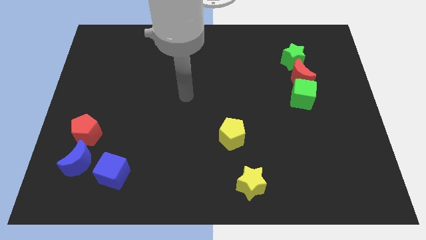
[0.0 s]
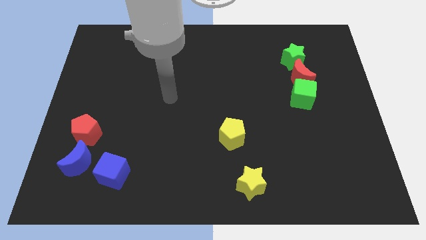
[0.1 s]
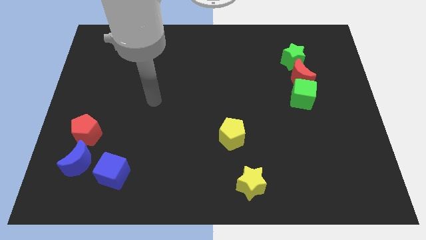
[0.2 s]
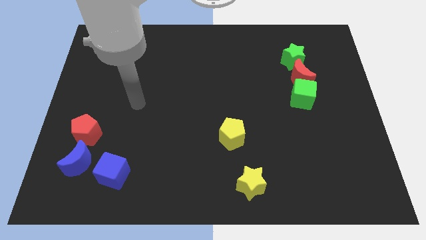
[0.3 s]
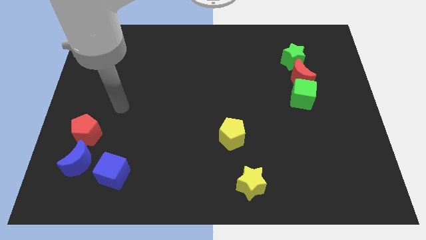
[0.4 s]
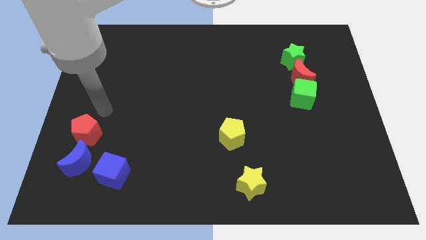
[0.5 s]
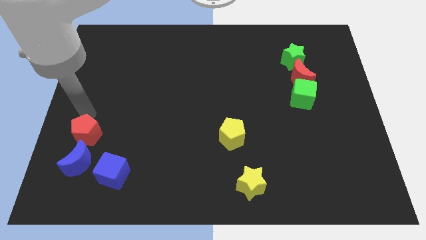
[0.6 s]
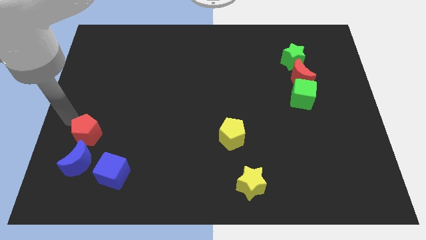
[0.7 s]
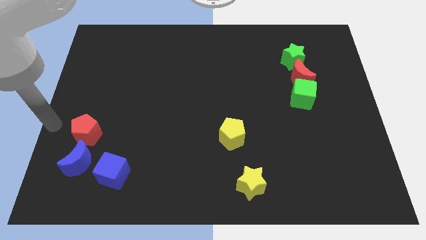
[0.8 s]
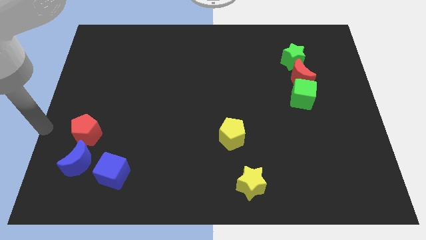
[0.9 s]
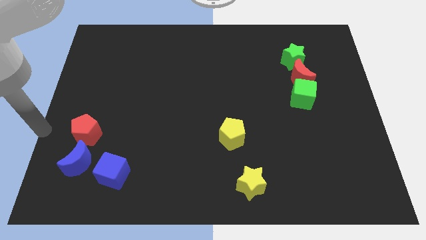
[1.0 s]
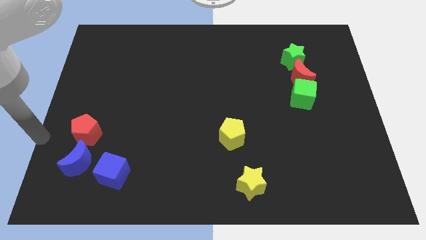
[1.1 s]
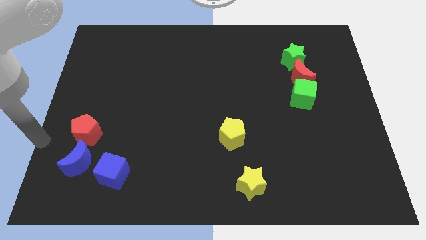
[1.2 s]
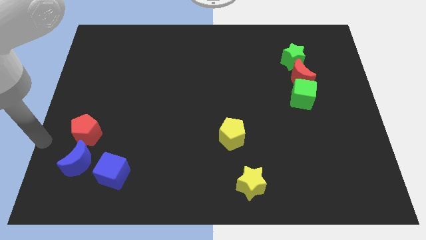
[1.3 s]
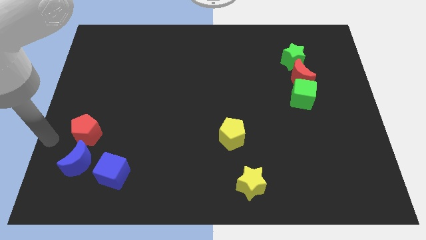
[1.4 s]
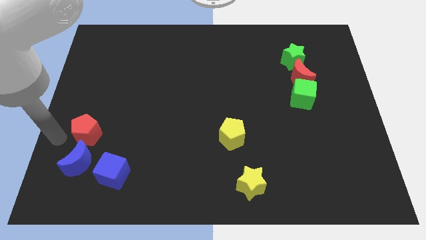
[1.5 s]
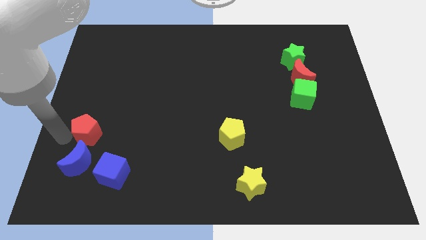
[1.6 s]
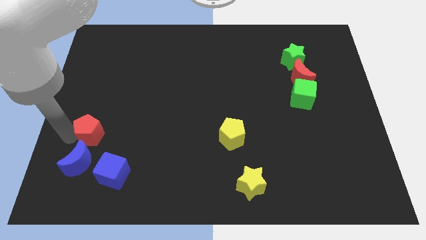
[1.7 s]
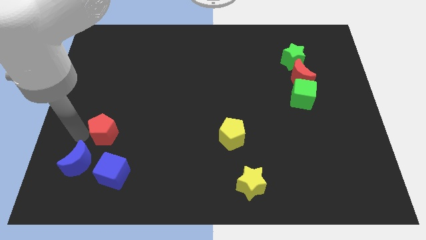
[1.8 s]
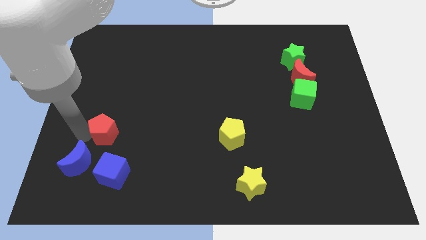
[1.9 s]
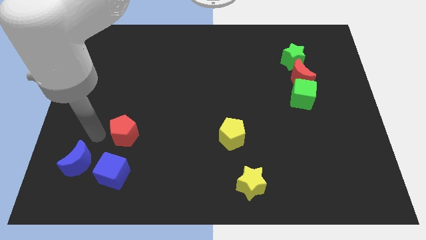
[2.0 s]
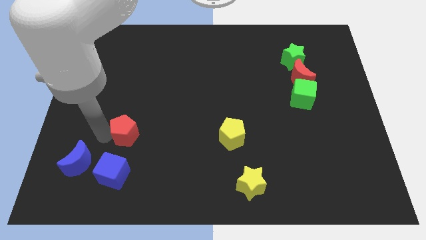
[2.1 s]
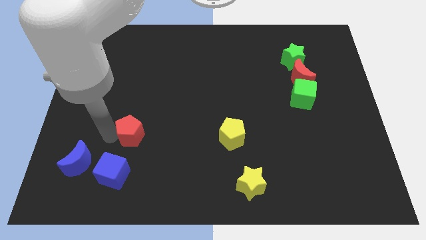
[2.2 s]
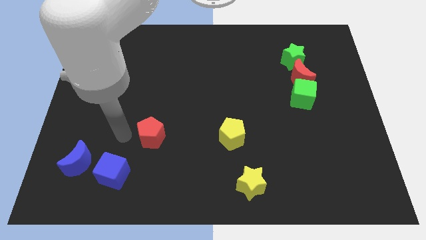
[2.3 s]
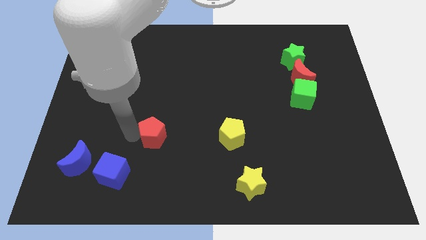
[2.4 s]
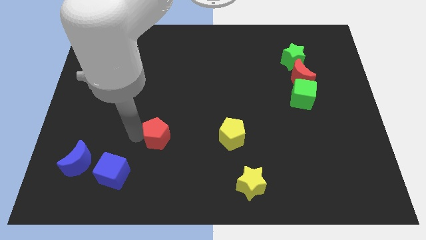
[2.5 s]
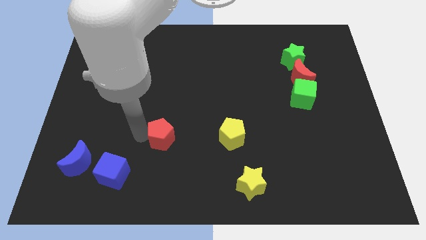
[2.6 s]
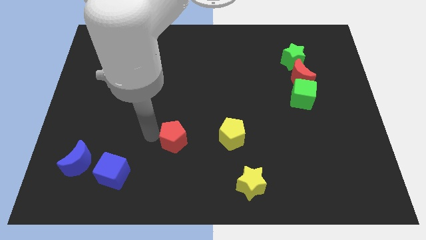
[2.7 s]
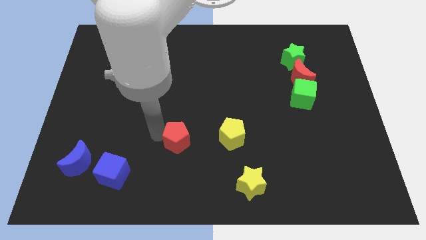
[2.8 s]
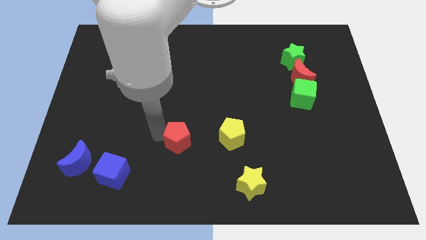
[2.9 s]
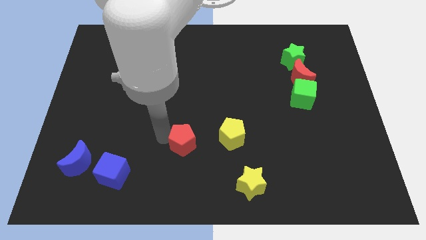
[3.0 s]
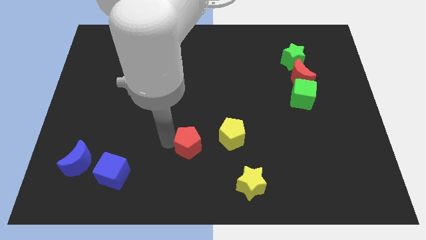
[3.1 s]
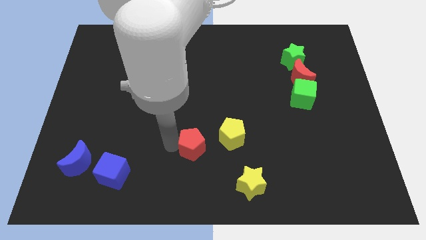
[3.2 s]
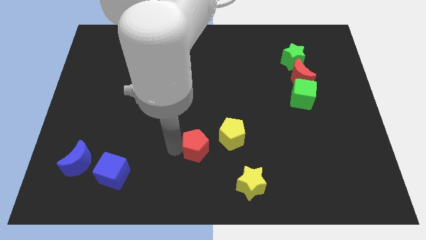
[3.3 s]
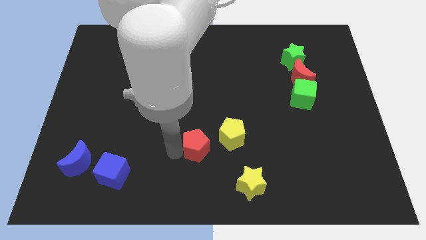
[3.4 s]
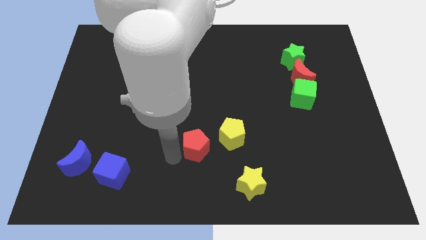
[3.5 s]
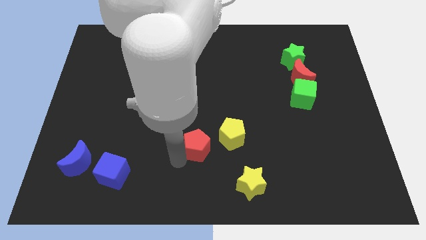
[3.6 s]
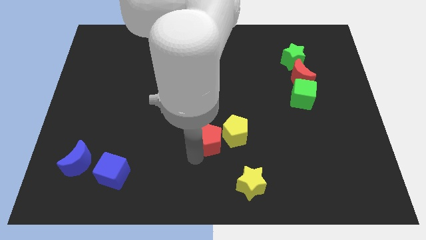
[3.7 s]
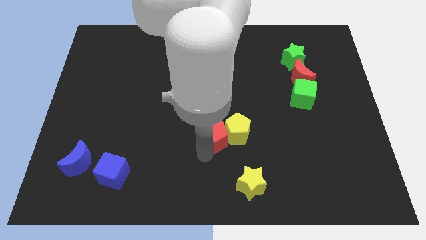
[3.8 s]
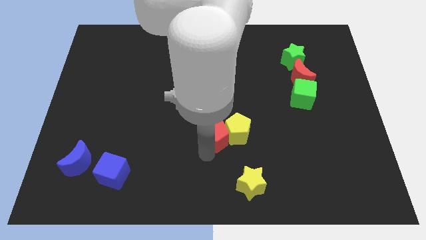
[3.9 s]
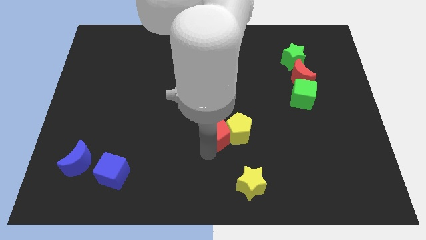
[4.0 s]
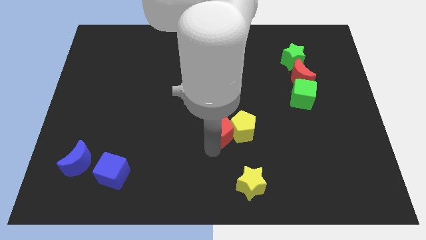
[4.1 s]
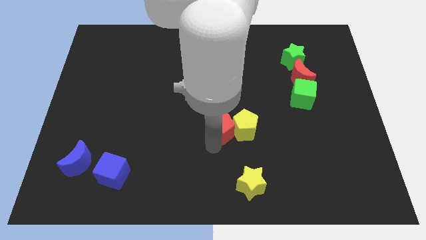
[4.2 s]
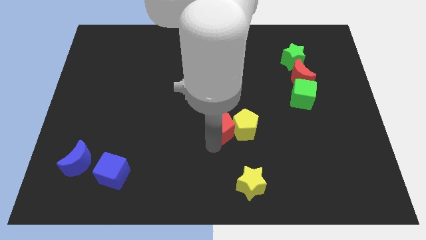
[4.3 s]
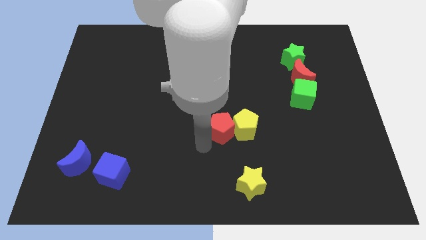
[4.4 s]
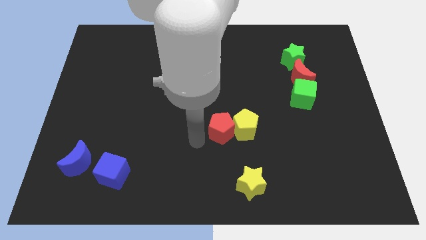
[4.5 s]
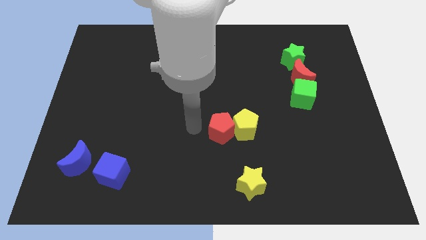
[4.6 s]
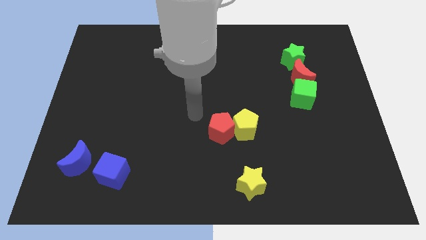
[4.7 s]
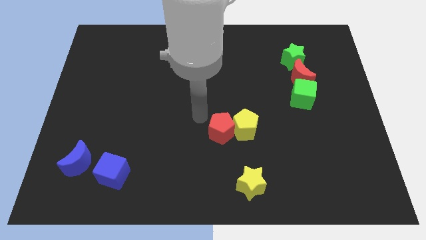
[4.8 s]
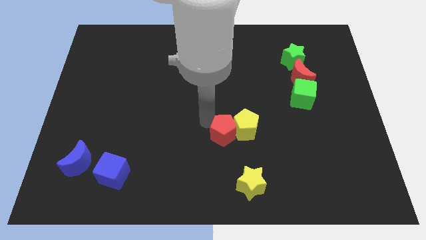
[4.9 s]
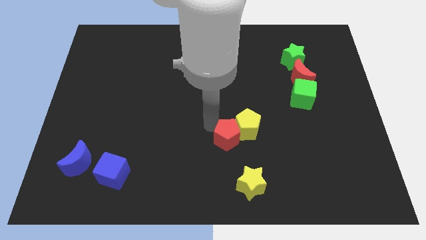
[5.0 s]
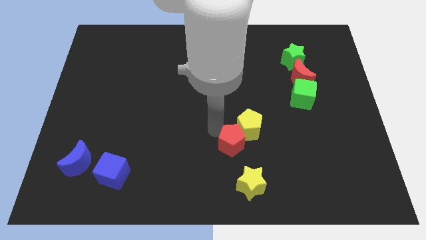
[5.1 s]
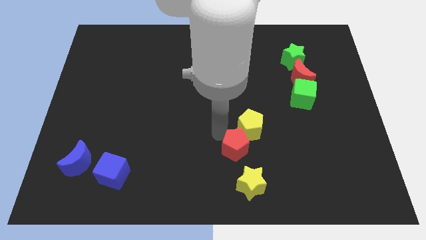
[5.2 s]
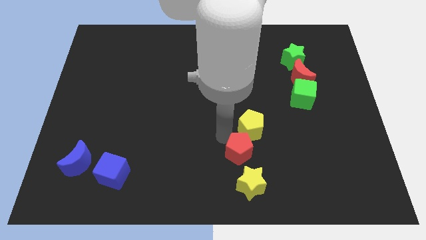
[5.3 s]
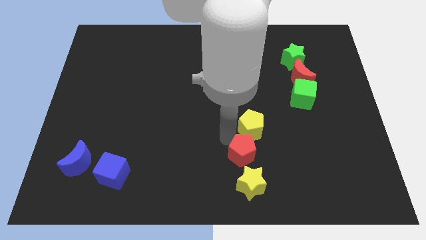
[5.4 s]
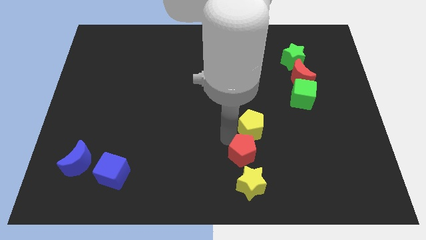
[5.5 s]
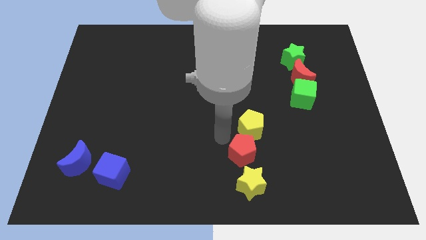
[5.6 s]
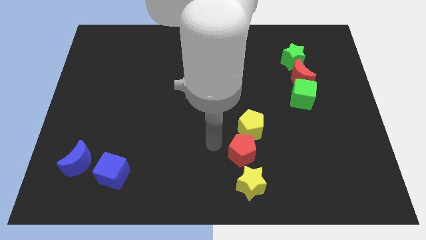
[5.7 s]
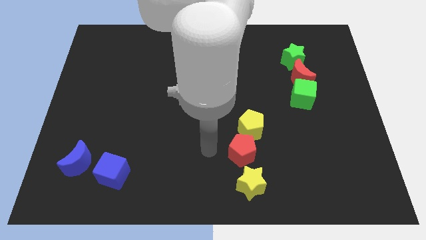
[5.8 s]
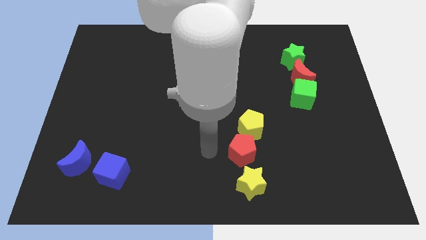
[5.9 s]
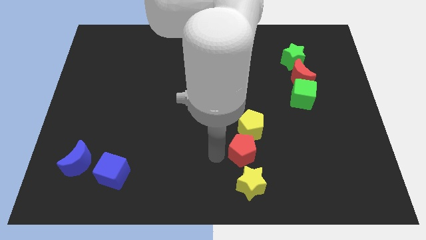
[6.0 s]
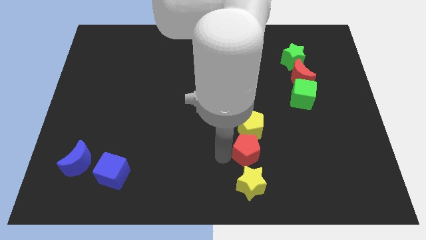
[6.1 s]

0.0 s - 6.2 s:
place the red pentagon in between the yellow blocks

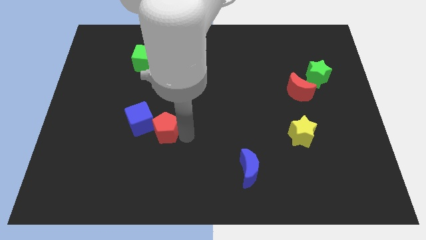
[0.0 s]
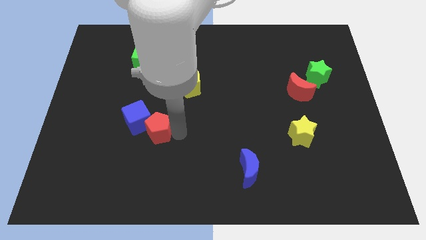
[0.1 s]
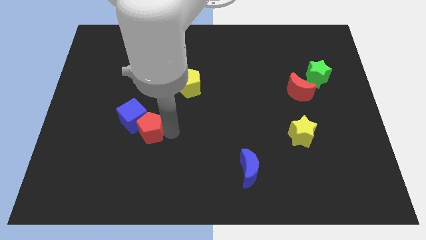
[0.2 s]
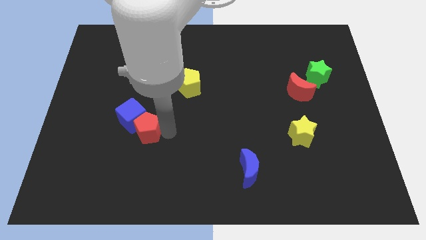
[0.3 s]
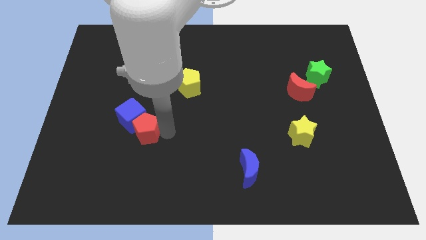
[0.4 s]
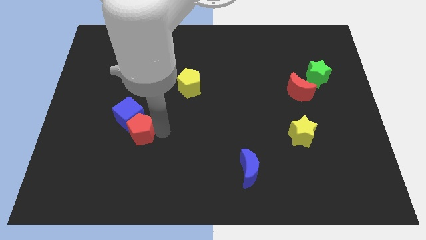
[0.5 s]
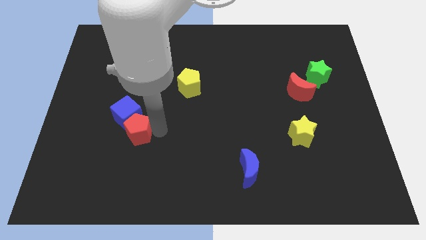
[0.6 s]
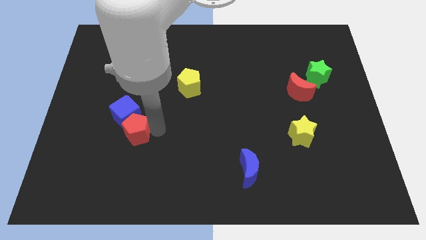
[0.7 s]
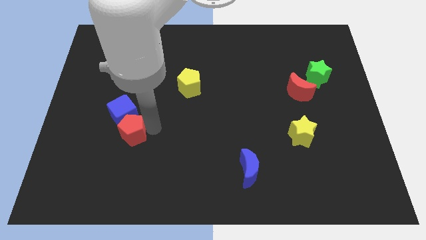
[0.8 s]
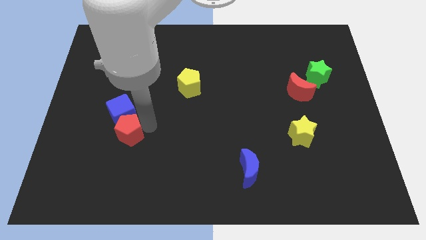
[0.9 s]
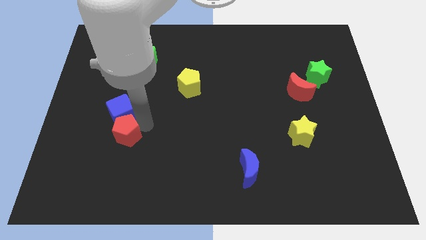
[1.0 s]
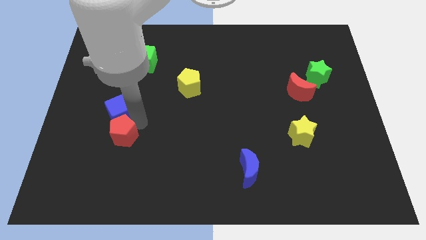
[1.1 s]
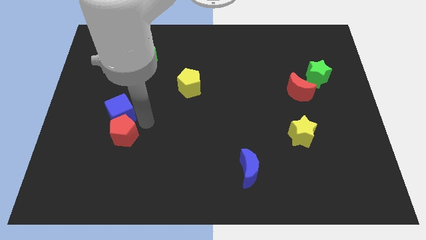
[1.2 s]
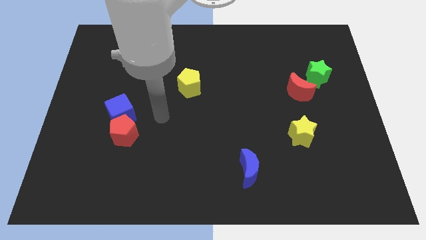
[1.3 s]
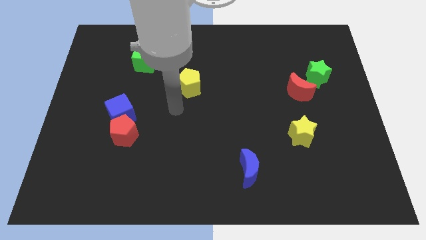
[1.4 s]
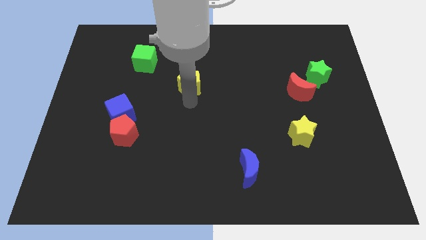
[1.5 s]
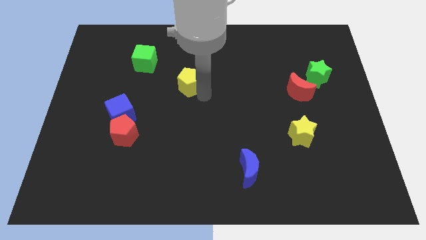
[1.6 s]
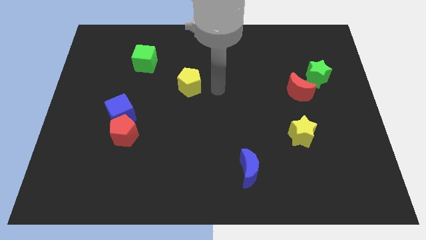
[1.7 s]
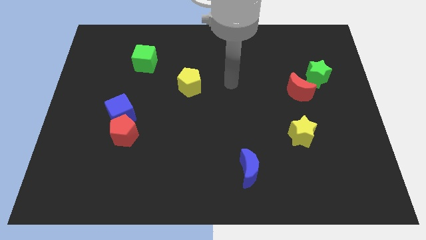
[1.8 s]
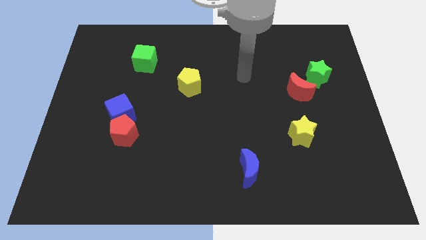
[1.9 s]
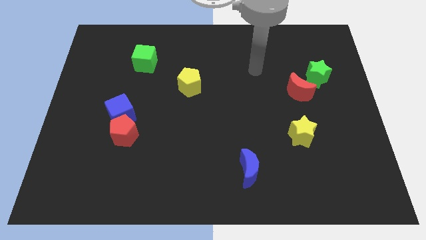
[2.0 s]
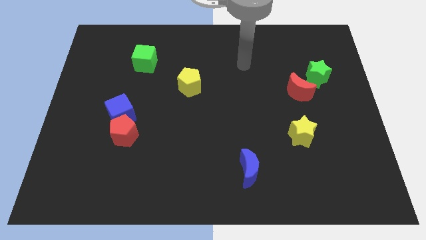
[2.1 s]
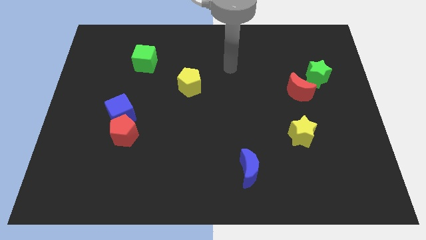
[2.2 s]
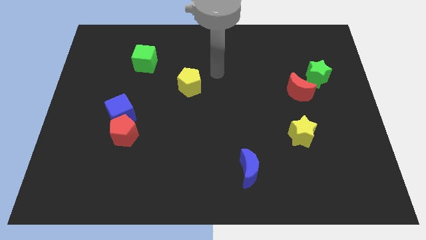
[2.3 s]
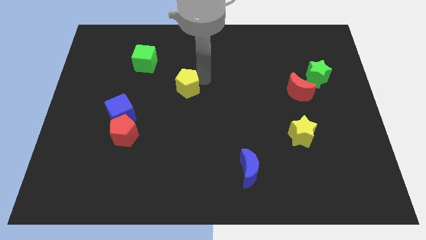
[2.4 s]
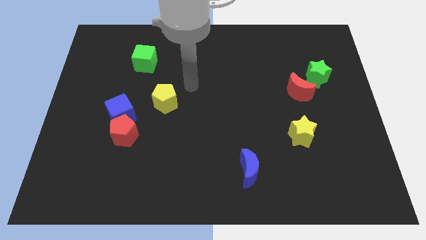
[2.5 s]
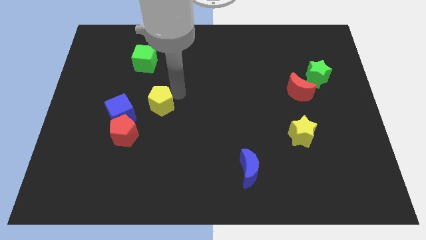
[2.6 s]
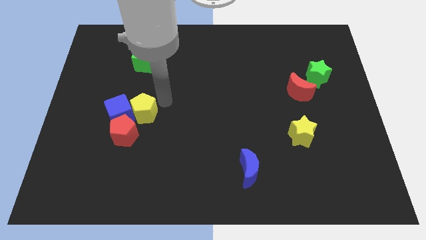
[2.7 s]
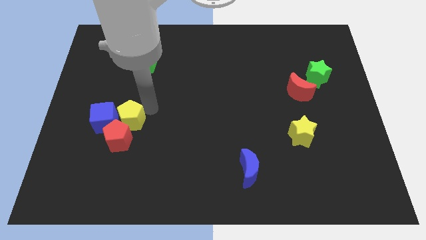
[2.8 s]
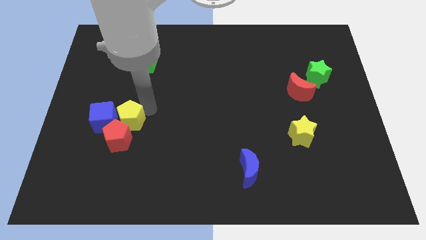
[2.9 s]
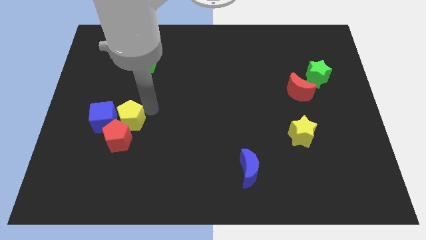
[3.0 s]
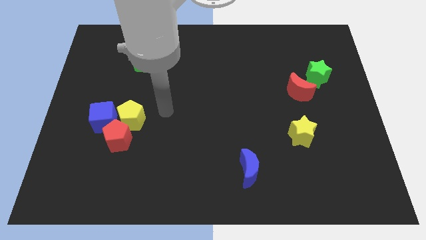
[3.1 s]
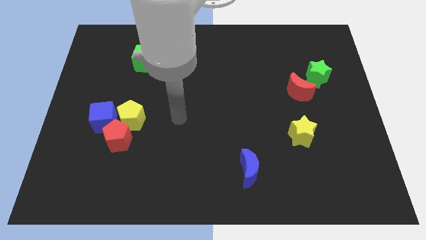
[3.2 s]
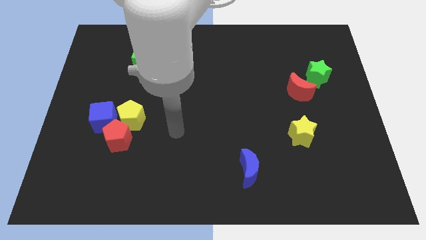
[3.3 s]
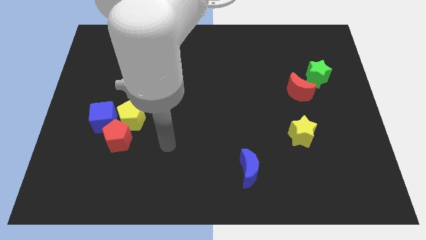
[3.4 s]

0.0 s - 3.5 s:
push the red pentagon blue cube and yellow pentagon together at the left
